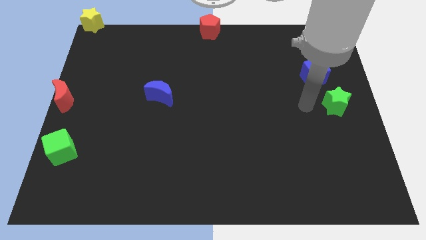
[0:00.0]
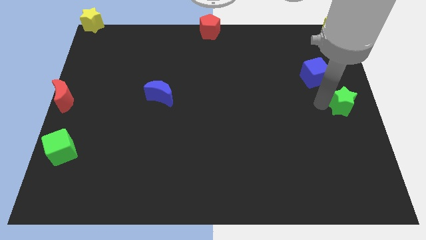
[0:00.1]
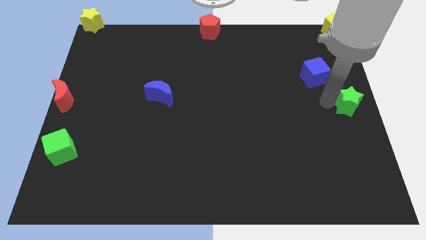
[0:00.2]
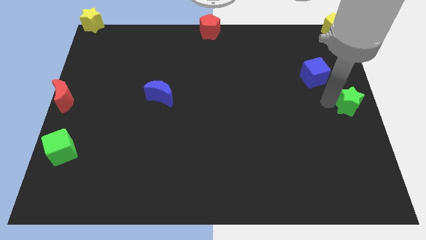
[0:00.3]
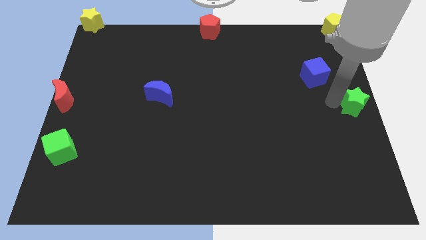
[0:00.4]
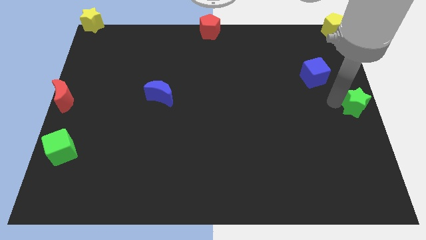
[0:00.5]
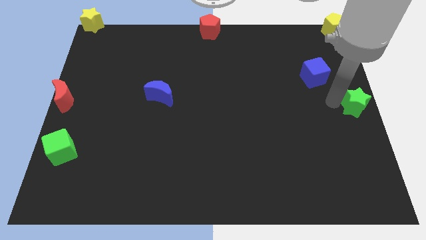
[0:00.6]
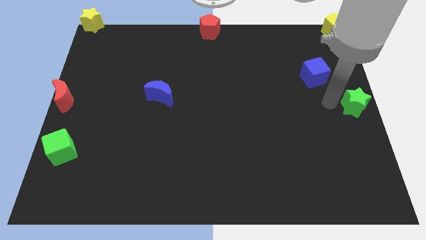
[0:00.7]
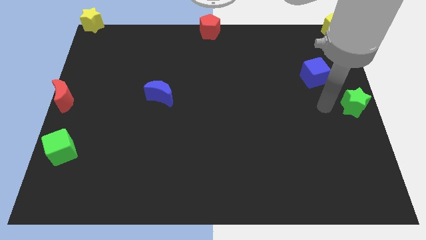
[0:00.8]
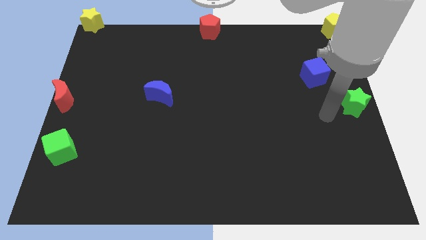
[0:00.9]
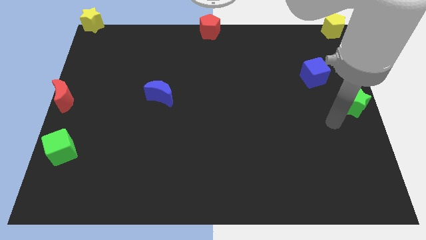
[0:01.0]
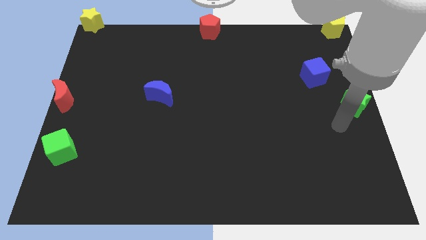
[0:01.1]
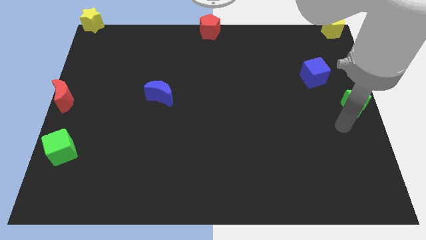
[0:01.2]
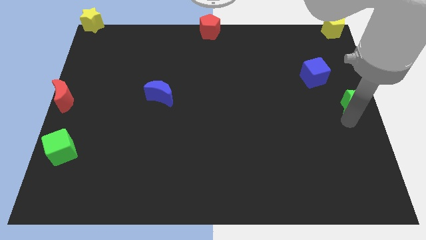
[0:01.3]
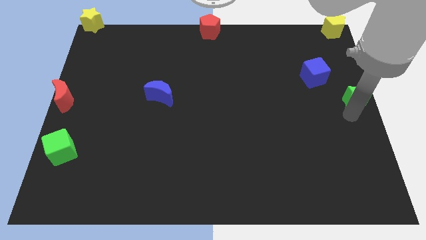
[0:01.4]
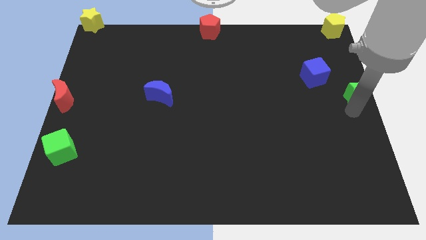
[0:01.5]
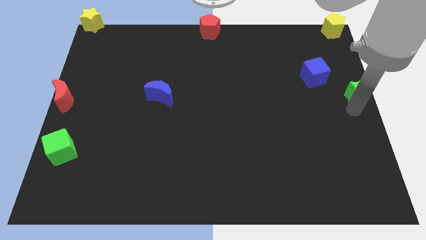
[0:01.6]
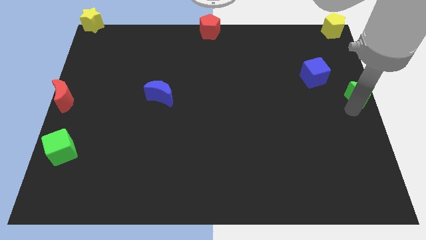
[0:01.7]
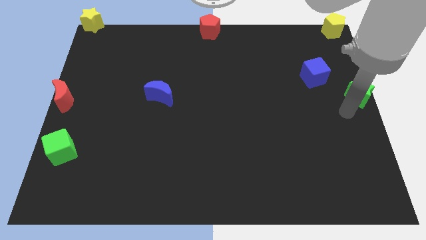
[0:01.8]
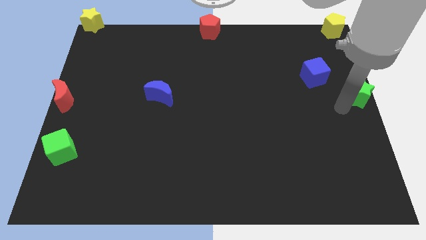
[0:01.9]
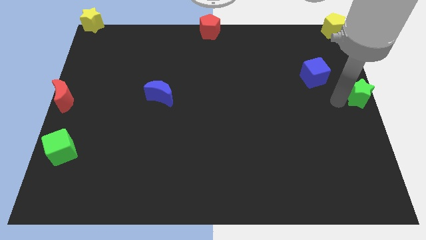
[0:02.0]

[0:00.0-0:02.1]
push the green star to the center right of the board

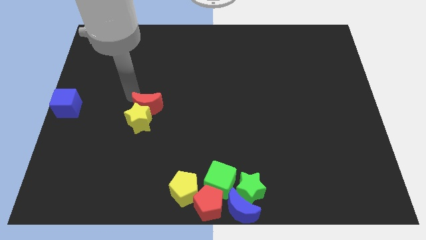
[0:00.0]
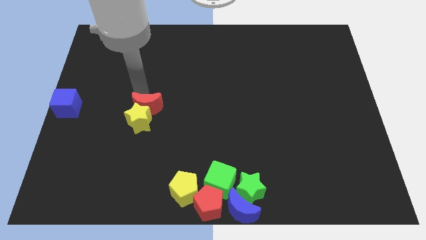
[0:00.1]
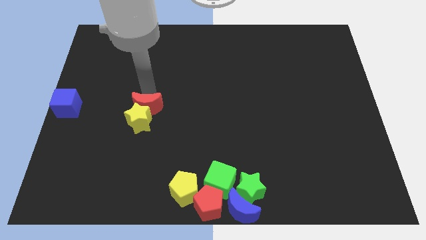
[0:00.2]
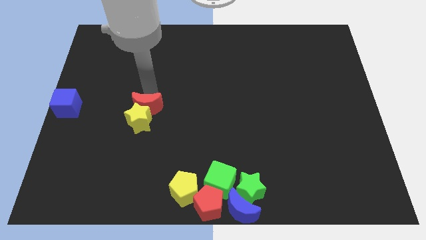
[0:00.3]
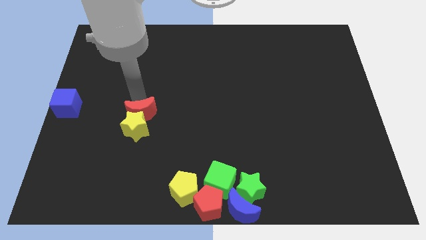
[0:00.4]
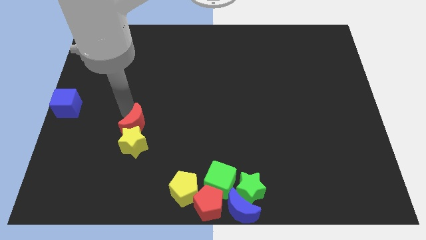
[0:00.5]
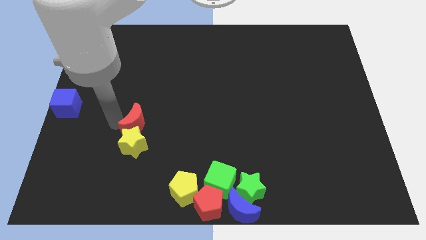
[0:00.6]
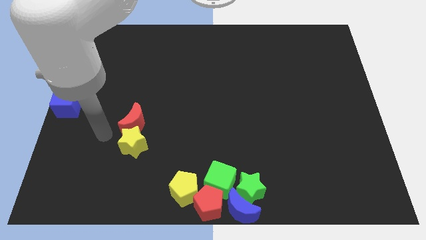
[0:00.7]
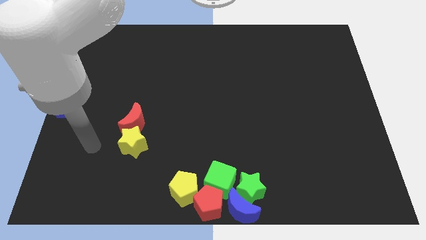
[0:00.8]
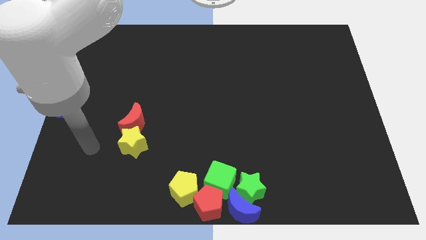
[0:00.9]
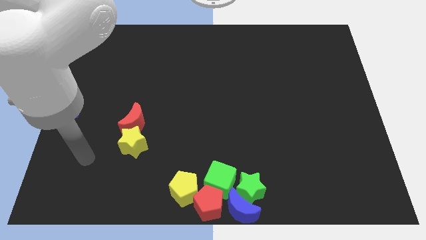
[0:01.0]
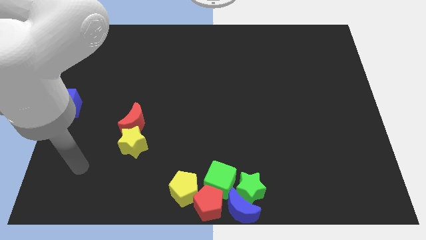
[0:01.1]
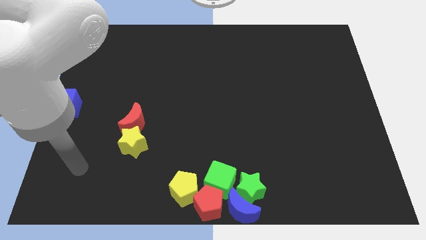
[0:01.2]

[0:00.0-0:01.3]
slide the red moon and yellow star

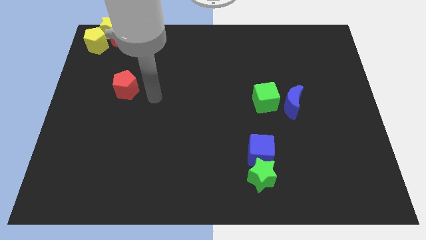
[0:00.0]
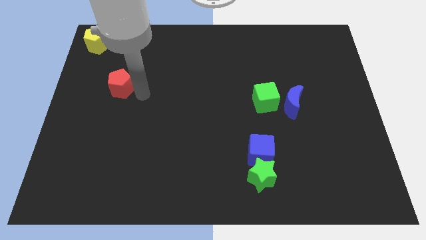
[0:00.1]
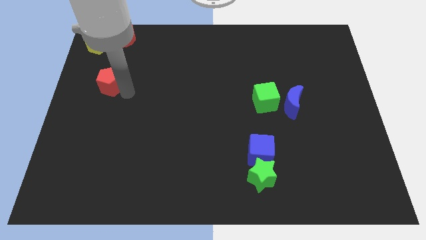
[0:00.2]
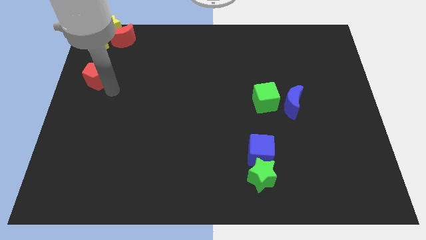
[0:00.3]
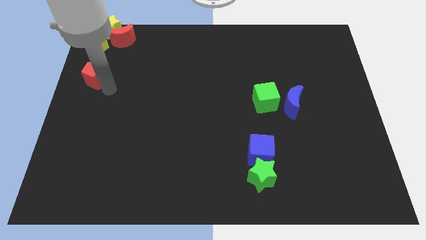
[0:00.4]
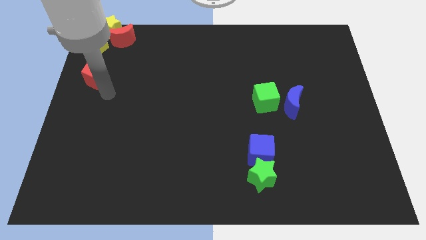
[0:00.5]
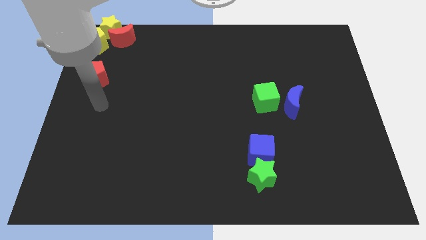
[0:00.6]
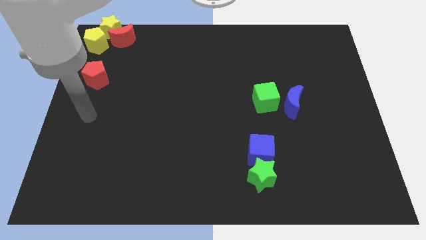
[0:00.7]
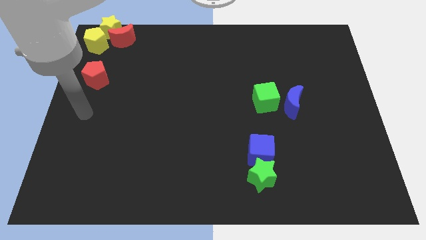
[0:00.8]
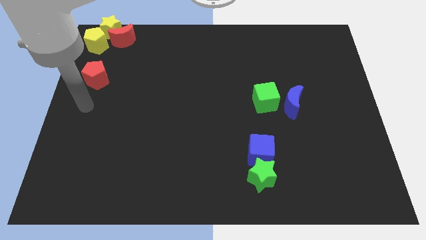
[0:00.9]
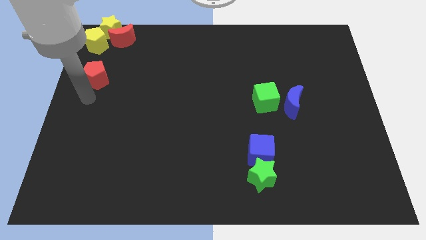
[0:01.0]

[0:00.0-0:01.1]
place the red pentagon below the yellow pentagon

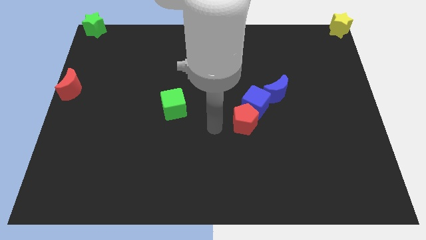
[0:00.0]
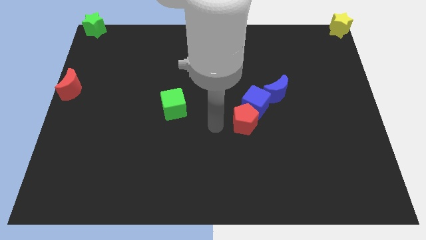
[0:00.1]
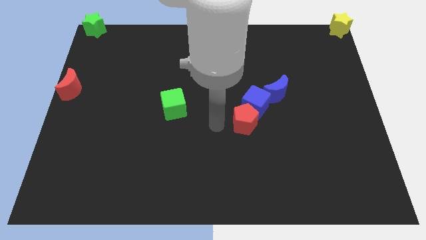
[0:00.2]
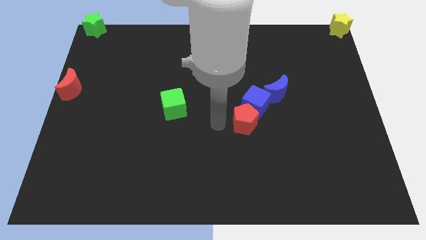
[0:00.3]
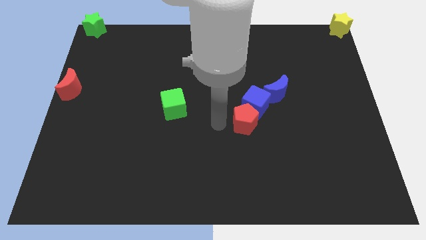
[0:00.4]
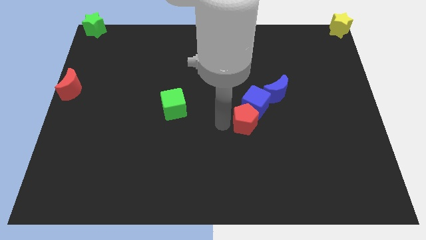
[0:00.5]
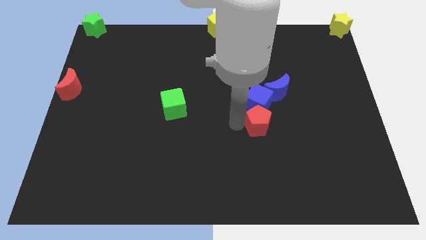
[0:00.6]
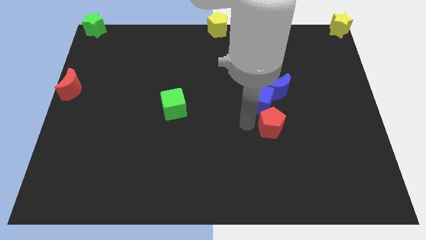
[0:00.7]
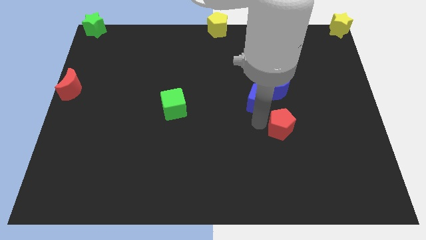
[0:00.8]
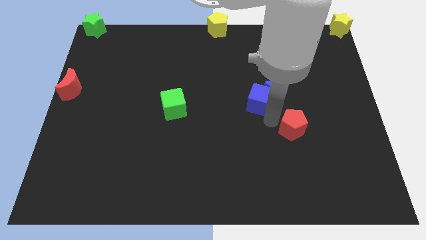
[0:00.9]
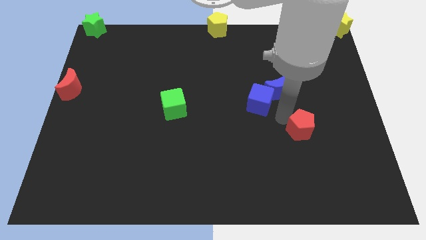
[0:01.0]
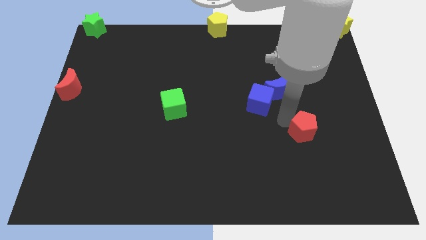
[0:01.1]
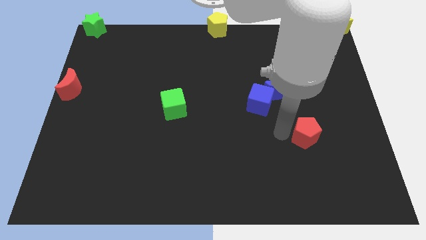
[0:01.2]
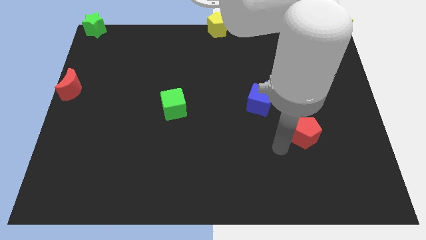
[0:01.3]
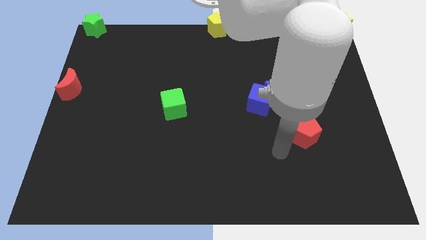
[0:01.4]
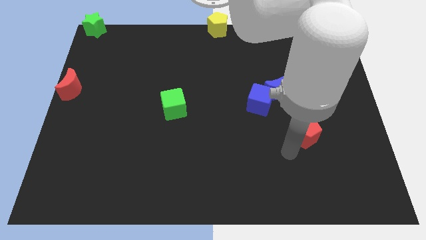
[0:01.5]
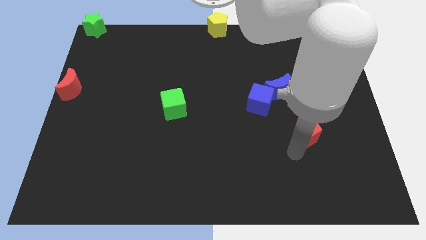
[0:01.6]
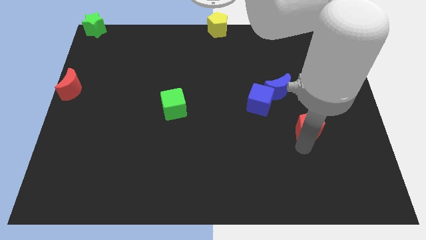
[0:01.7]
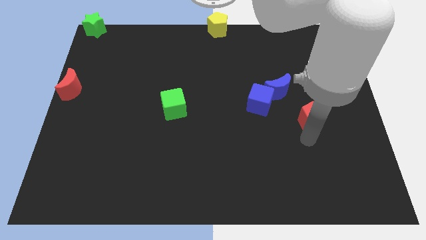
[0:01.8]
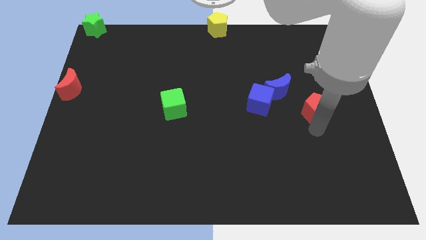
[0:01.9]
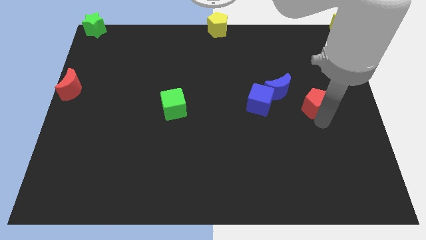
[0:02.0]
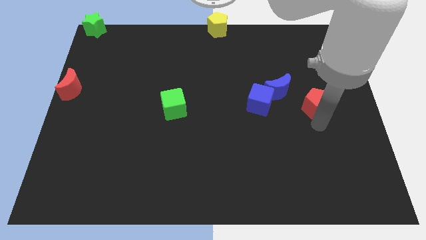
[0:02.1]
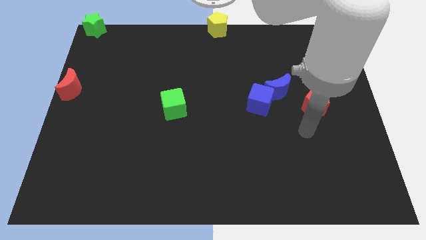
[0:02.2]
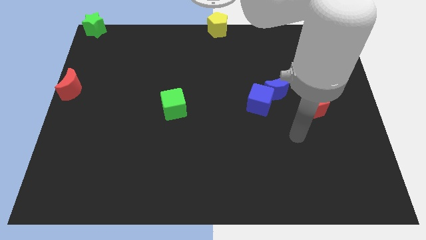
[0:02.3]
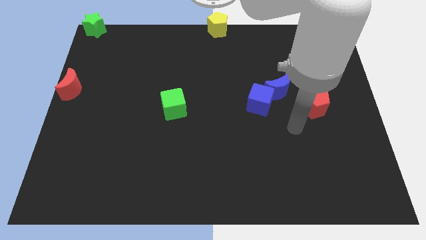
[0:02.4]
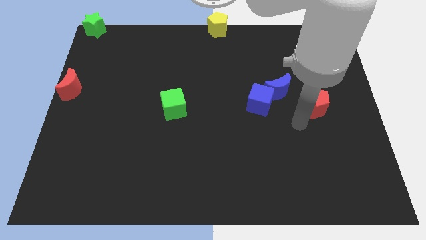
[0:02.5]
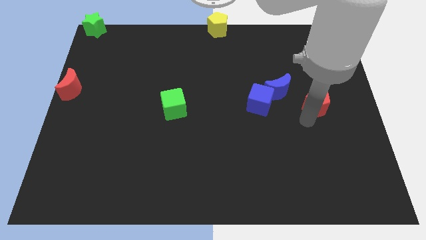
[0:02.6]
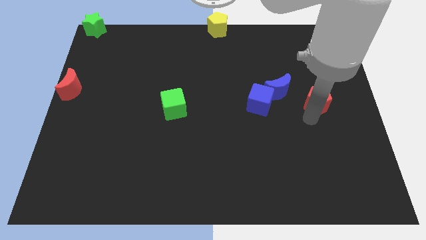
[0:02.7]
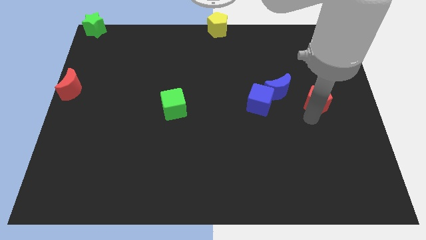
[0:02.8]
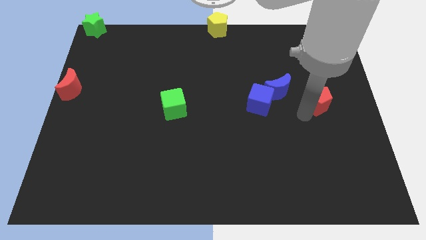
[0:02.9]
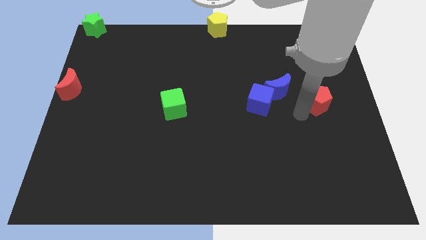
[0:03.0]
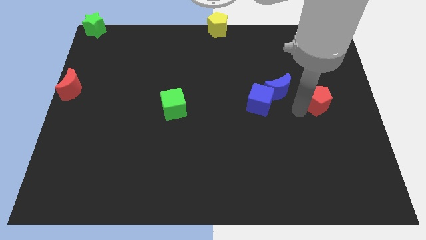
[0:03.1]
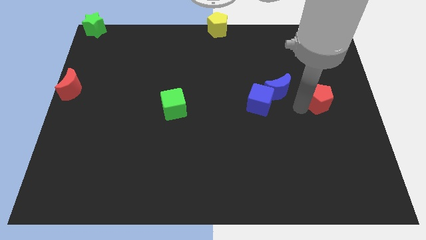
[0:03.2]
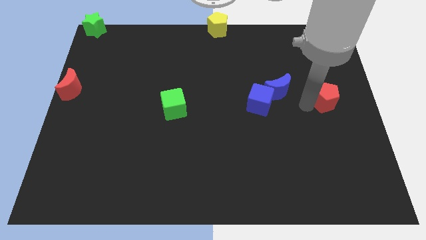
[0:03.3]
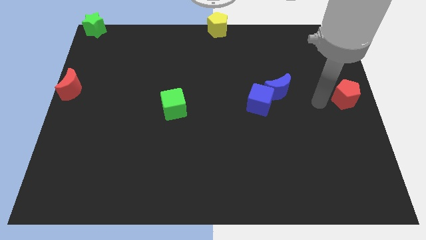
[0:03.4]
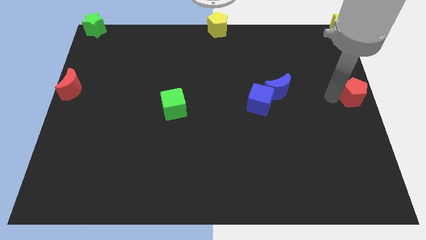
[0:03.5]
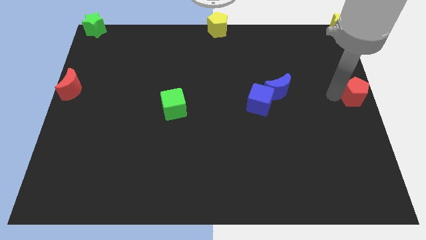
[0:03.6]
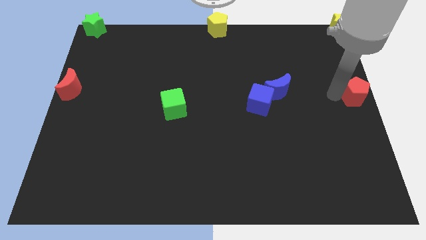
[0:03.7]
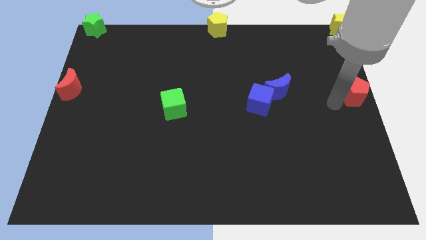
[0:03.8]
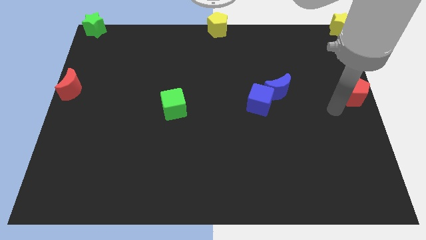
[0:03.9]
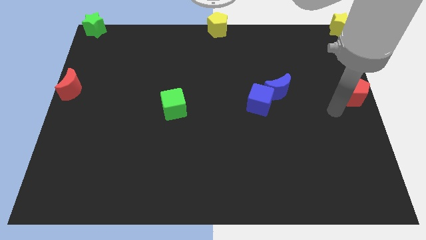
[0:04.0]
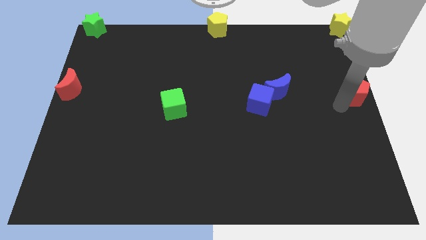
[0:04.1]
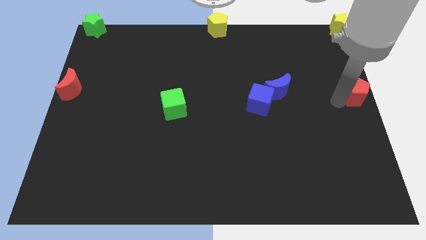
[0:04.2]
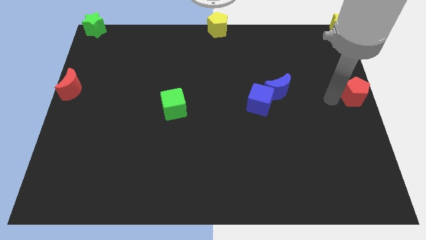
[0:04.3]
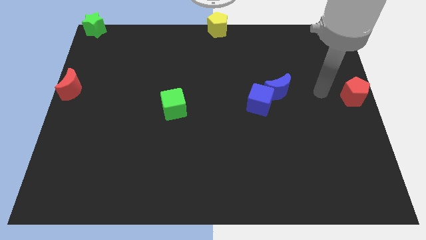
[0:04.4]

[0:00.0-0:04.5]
move the red pentagon to the center right of the board
